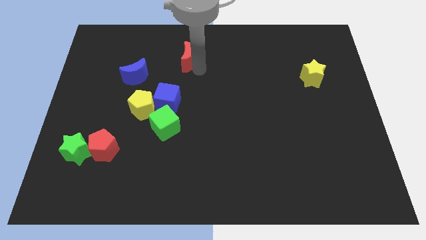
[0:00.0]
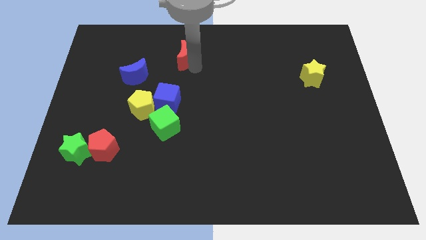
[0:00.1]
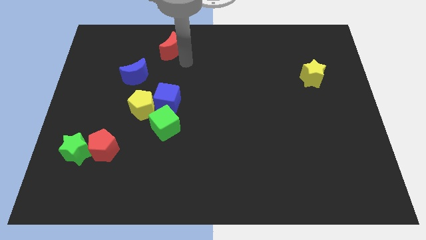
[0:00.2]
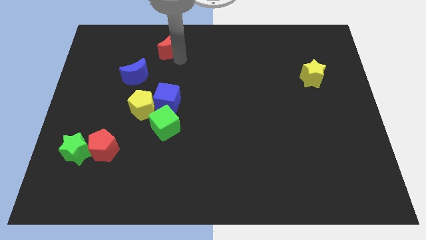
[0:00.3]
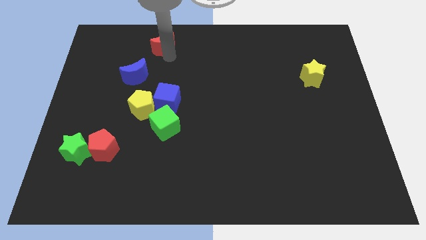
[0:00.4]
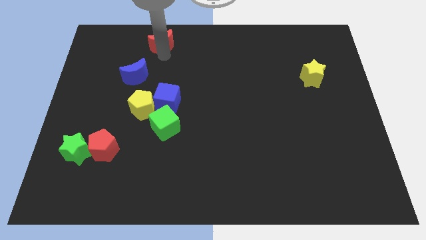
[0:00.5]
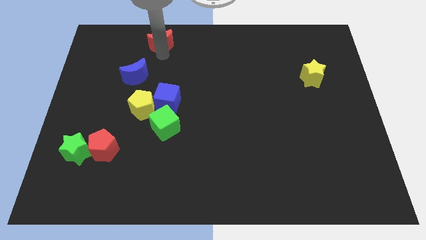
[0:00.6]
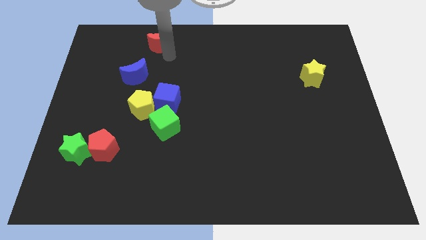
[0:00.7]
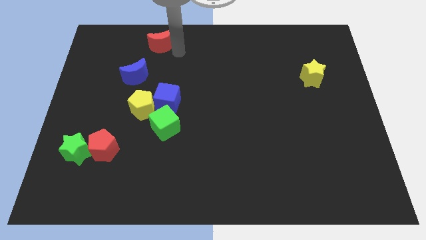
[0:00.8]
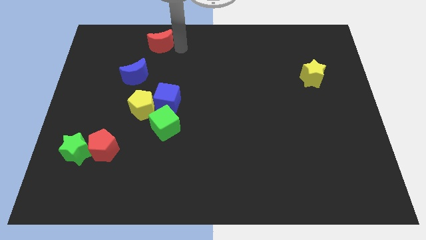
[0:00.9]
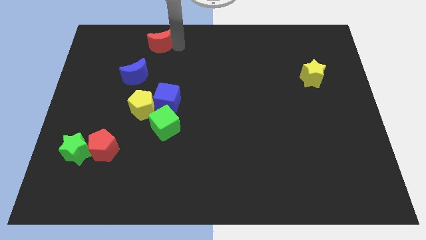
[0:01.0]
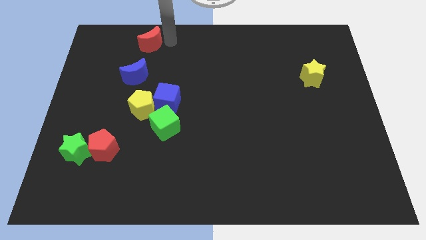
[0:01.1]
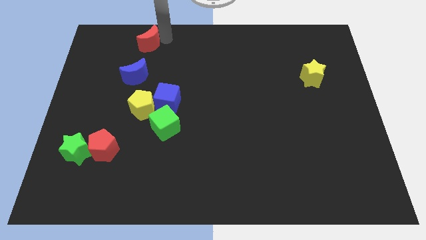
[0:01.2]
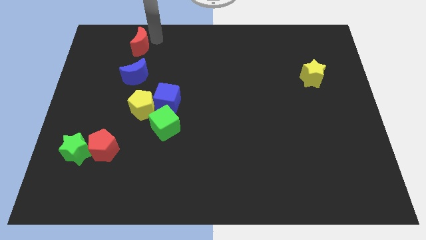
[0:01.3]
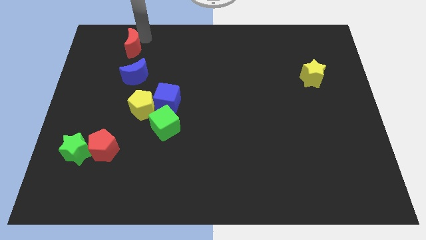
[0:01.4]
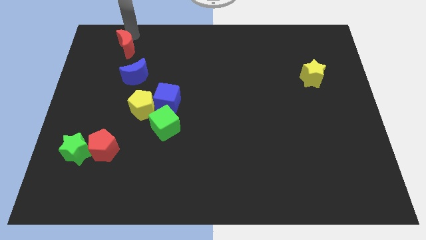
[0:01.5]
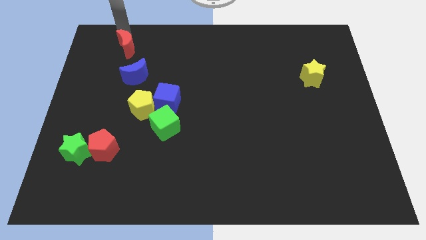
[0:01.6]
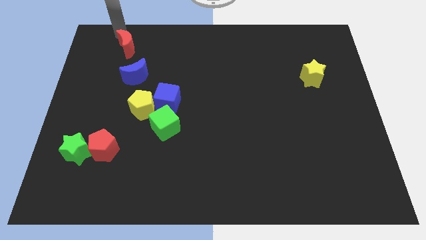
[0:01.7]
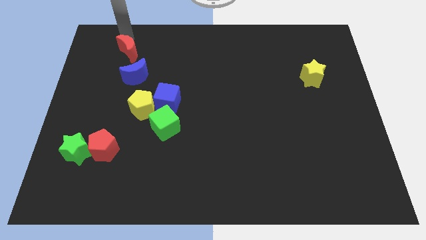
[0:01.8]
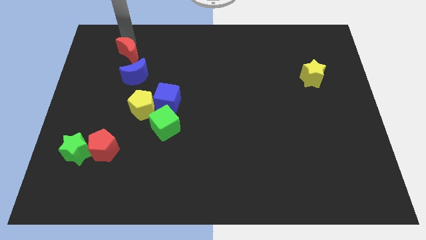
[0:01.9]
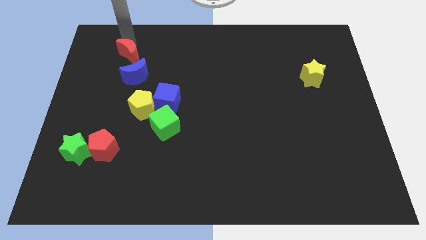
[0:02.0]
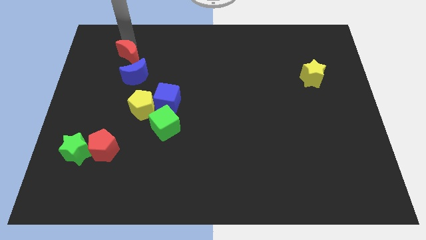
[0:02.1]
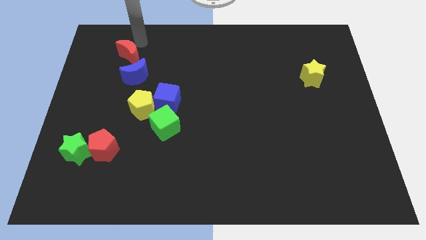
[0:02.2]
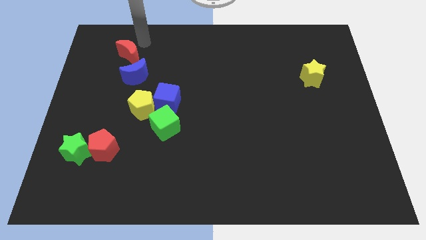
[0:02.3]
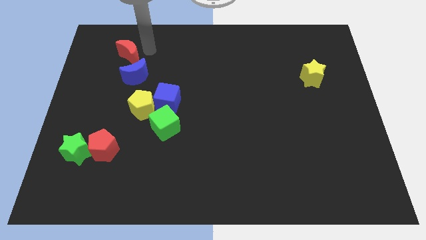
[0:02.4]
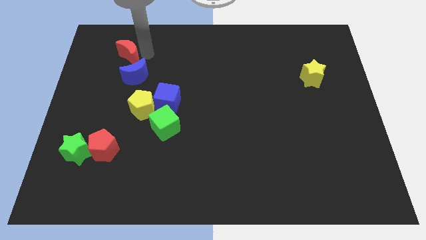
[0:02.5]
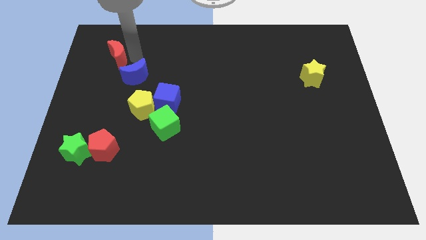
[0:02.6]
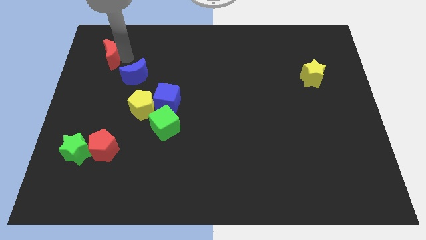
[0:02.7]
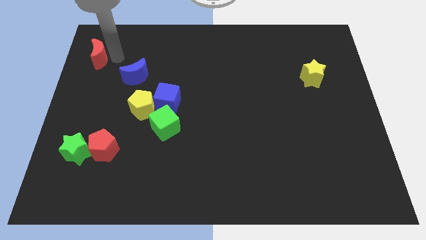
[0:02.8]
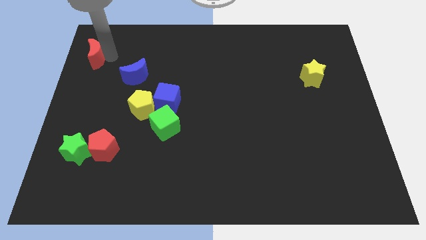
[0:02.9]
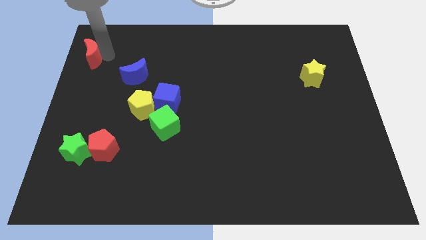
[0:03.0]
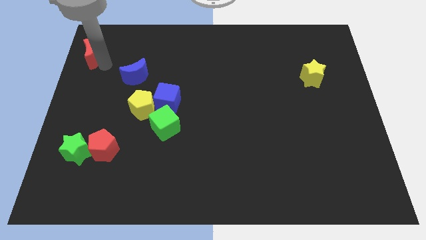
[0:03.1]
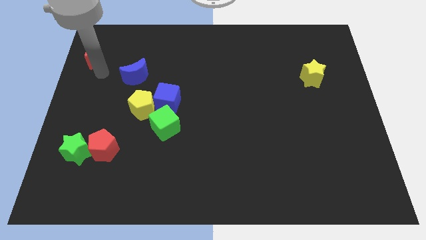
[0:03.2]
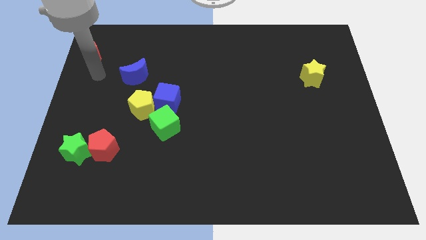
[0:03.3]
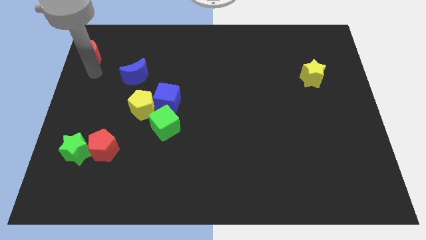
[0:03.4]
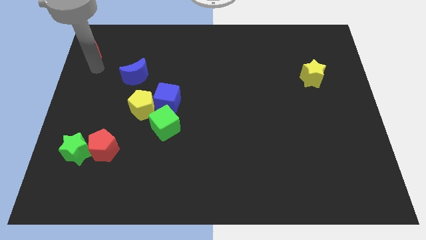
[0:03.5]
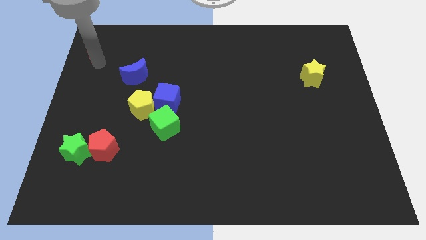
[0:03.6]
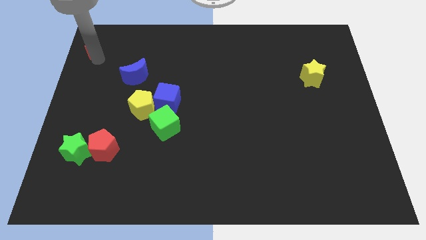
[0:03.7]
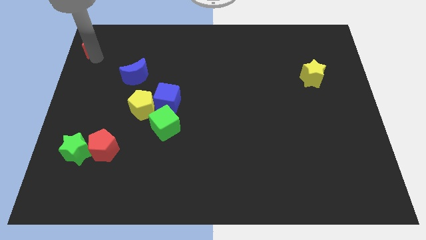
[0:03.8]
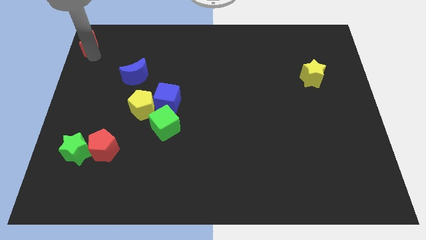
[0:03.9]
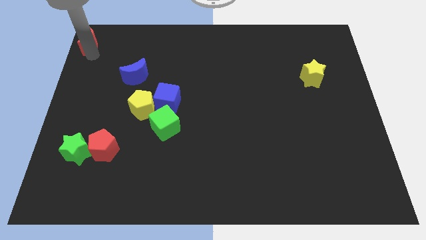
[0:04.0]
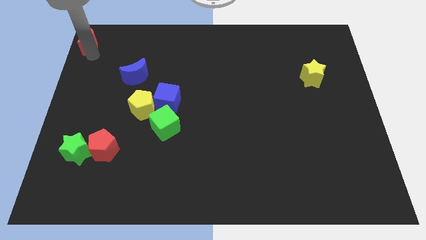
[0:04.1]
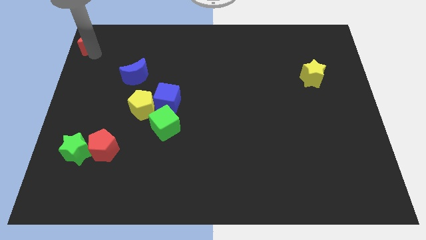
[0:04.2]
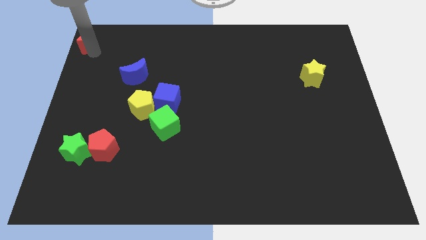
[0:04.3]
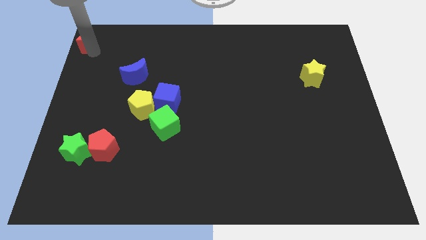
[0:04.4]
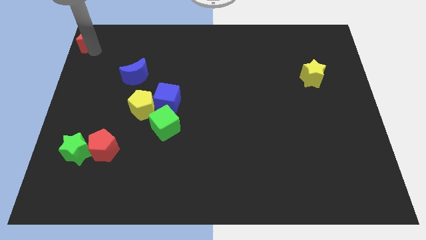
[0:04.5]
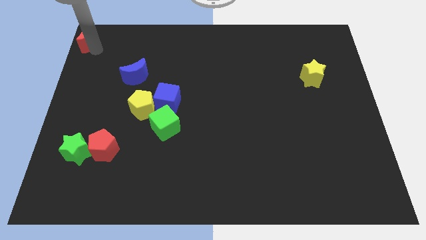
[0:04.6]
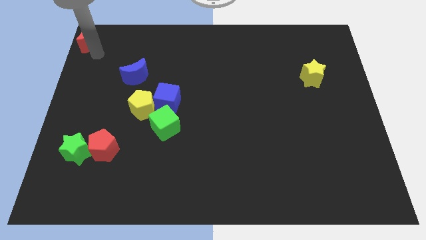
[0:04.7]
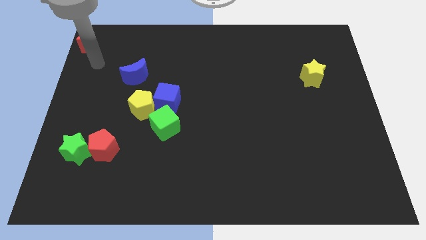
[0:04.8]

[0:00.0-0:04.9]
place the red moon at the top left corner of the board

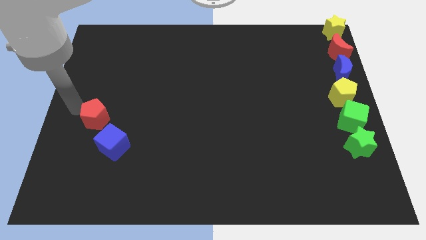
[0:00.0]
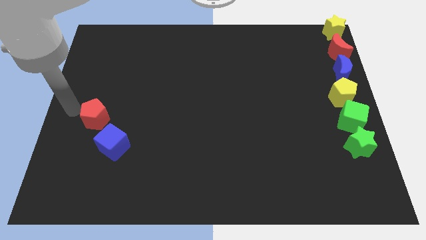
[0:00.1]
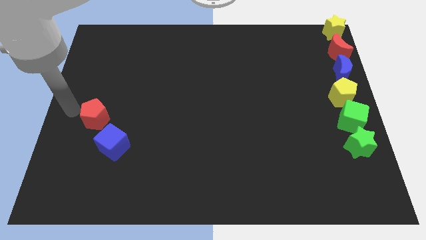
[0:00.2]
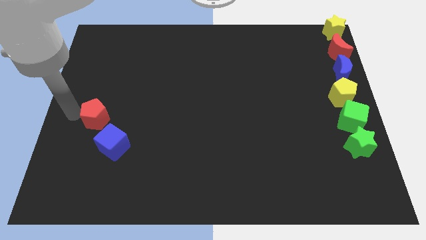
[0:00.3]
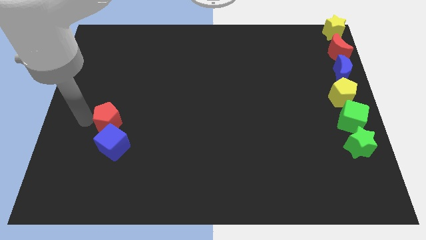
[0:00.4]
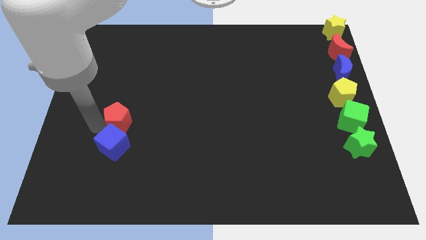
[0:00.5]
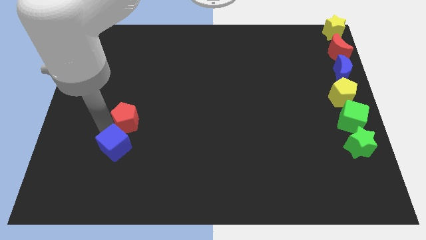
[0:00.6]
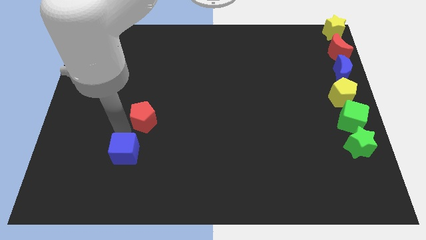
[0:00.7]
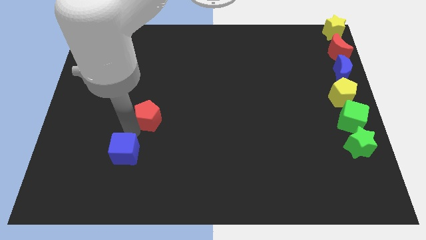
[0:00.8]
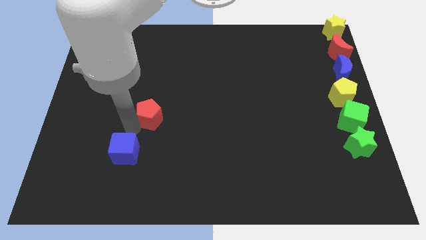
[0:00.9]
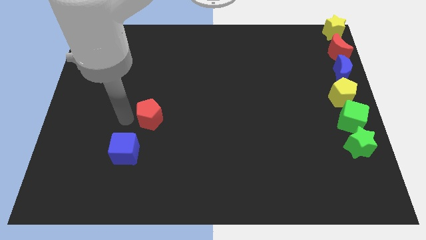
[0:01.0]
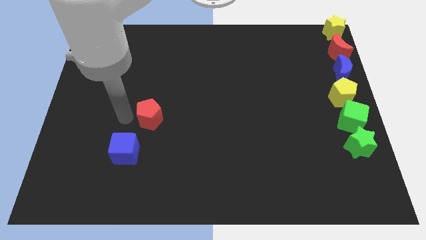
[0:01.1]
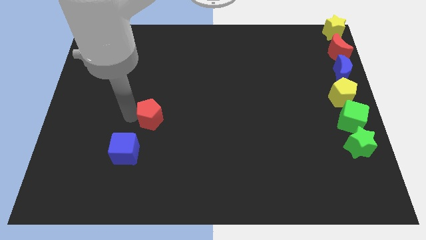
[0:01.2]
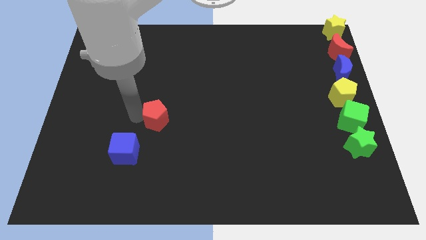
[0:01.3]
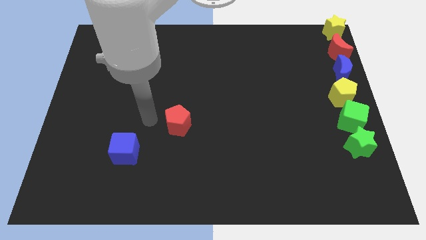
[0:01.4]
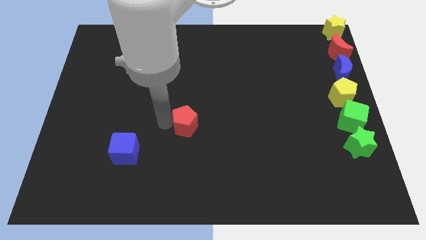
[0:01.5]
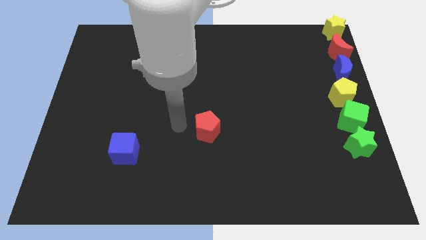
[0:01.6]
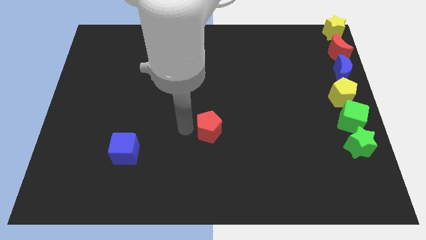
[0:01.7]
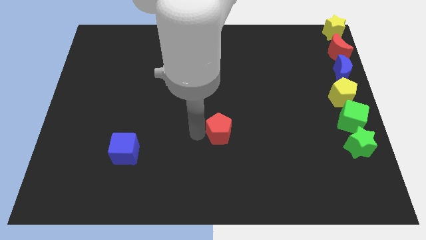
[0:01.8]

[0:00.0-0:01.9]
push the red pentagon towards the right

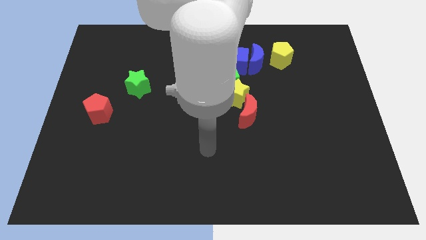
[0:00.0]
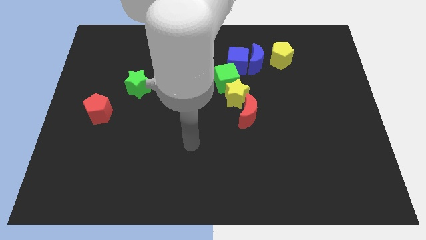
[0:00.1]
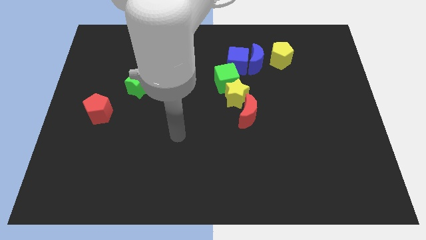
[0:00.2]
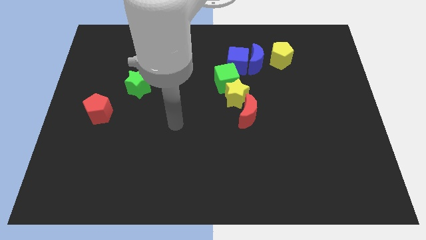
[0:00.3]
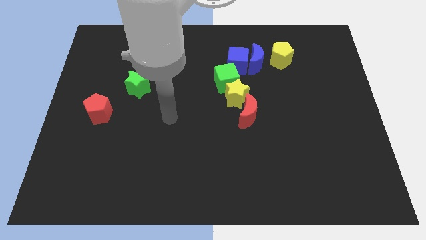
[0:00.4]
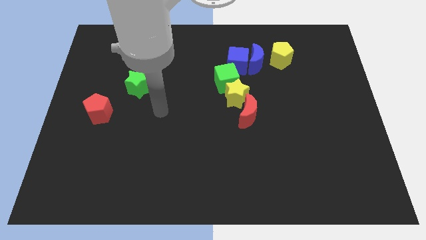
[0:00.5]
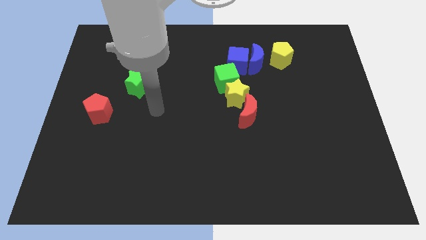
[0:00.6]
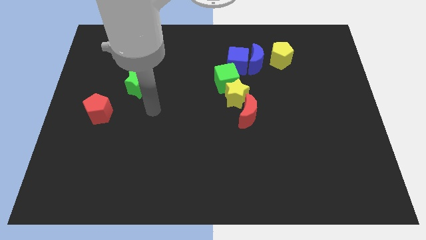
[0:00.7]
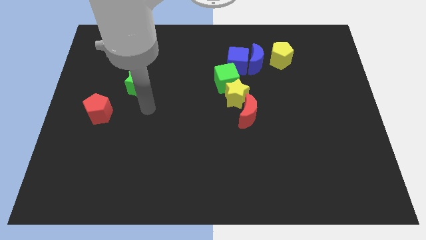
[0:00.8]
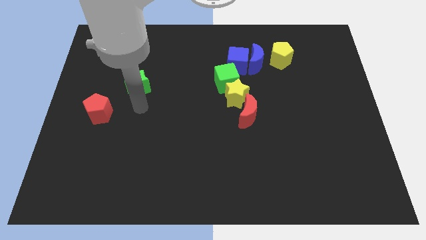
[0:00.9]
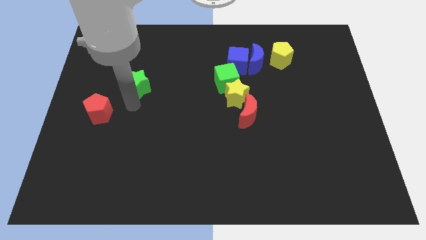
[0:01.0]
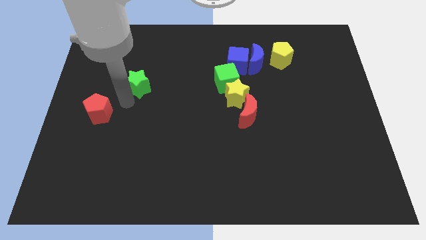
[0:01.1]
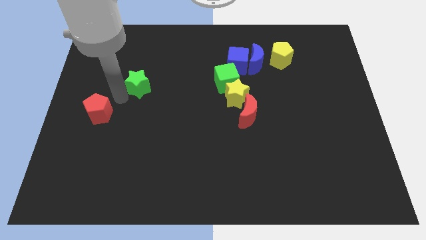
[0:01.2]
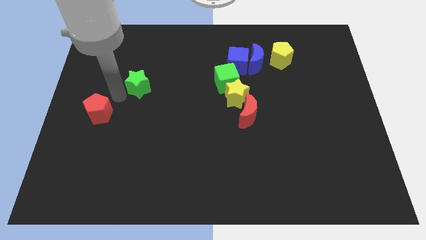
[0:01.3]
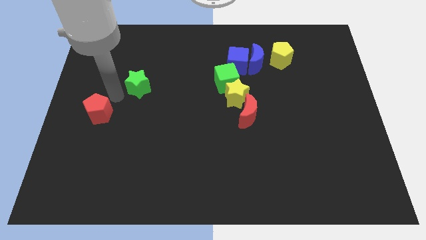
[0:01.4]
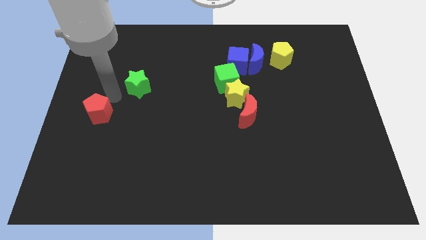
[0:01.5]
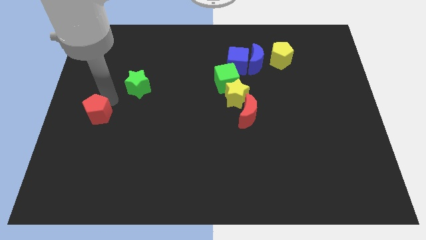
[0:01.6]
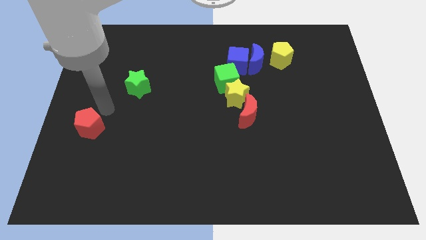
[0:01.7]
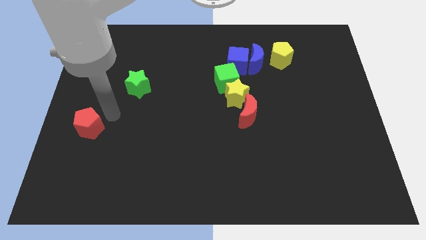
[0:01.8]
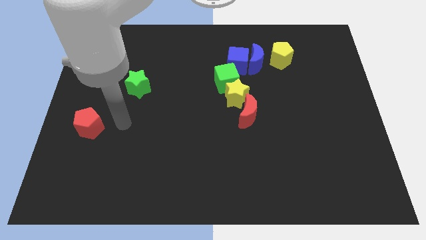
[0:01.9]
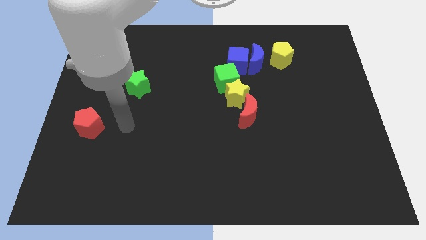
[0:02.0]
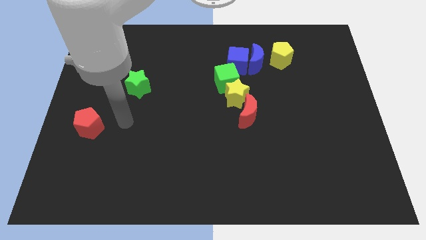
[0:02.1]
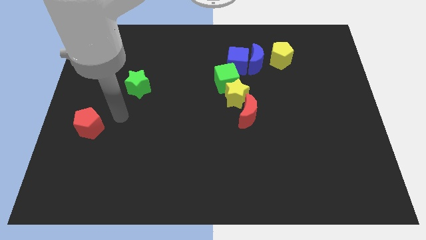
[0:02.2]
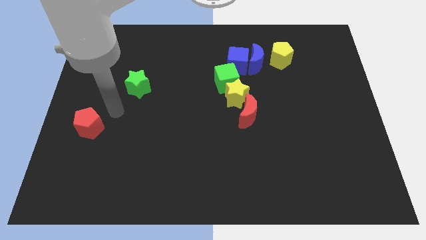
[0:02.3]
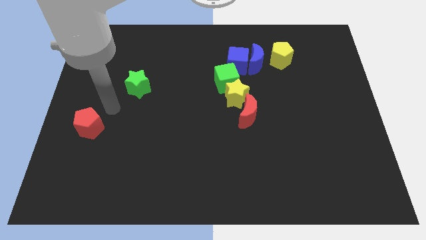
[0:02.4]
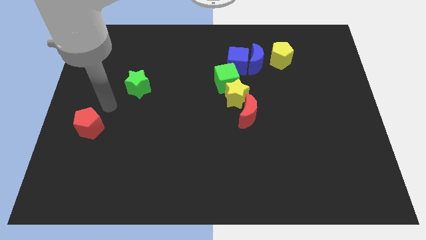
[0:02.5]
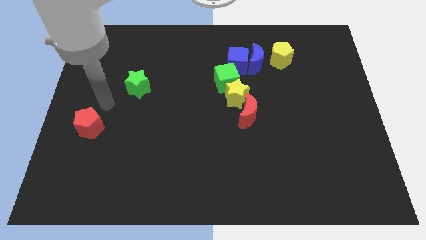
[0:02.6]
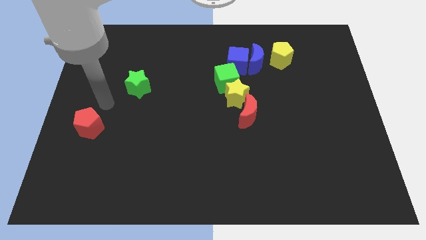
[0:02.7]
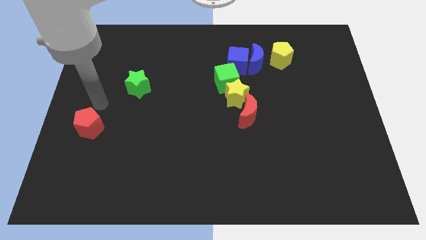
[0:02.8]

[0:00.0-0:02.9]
slightly push the red pentagon towards the bottom side of the board
